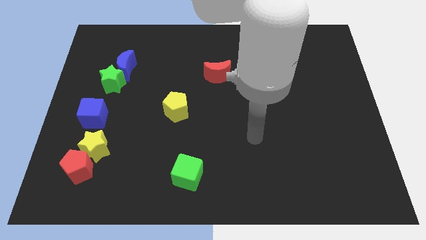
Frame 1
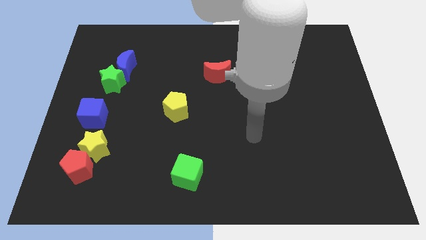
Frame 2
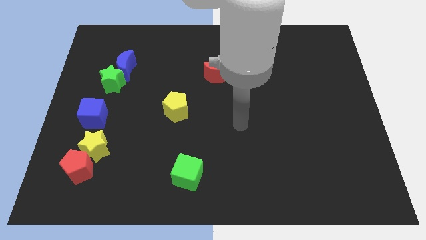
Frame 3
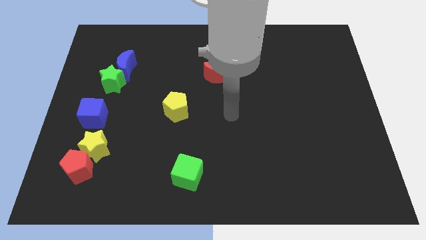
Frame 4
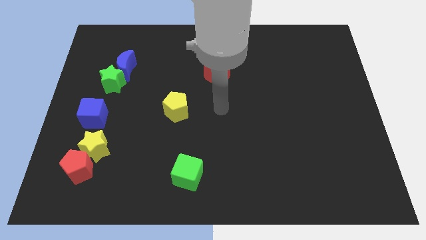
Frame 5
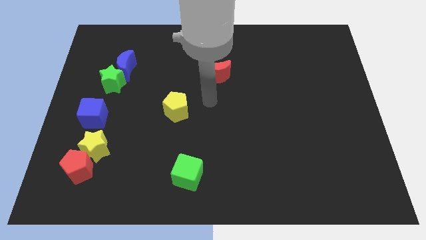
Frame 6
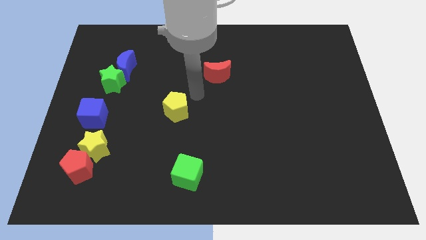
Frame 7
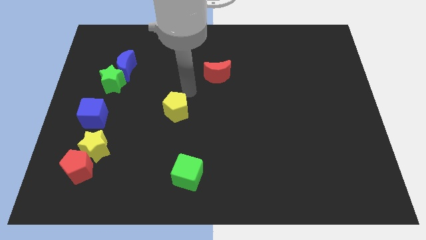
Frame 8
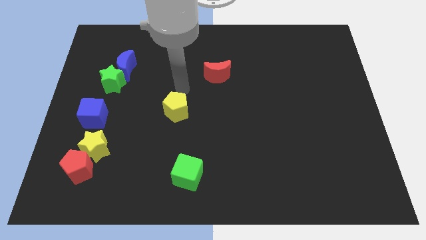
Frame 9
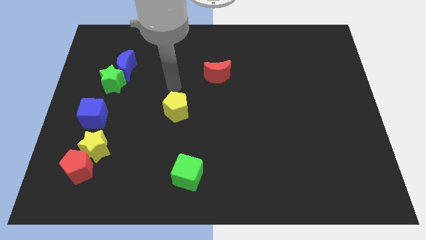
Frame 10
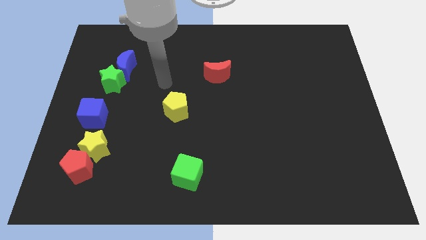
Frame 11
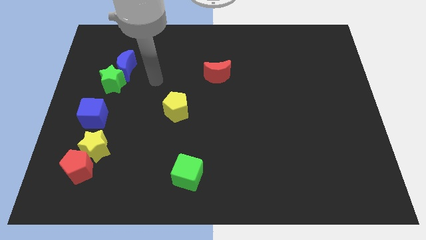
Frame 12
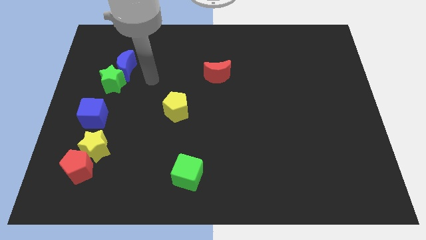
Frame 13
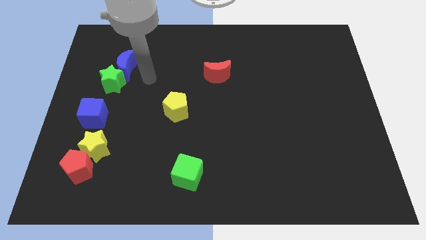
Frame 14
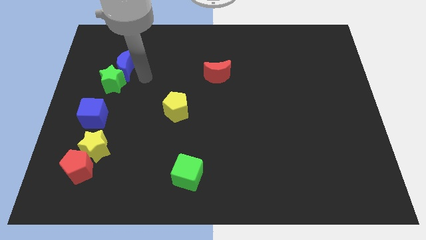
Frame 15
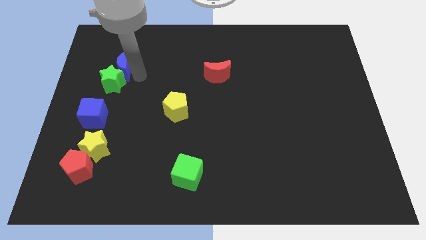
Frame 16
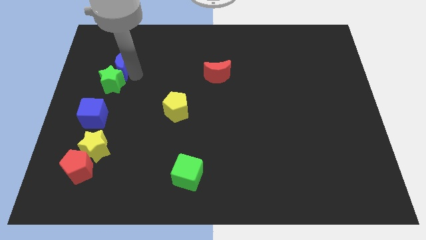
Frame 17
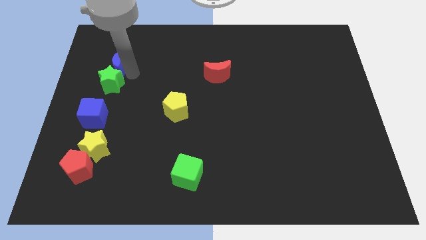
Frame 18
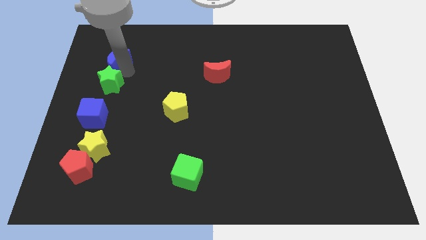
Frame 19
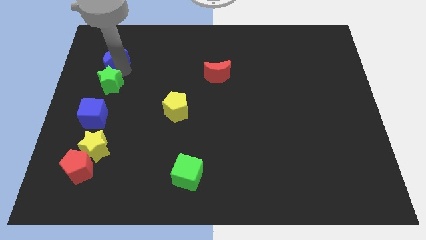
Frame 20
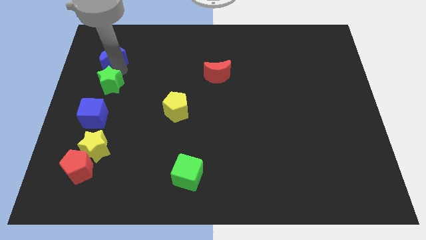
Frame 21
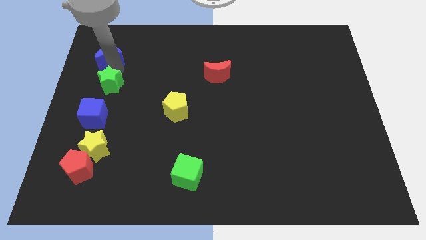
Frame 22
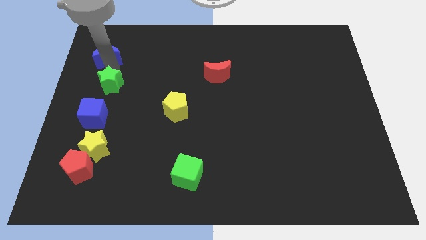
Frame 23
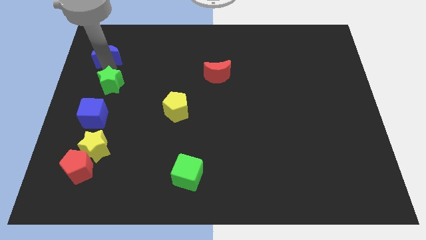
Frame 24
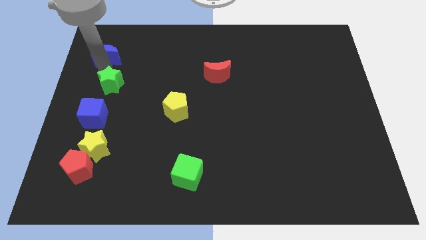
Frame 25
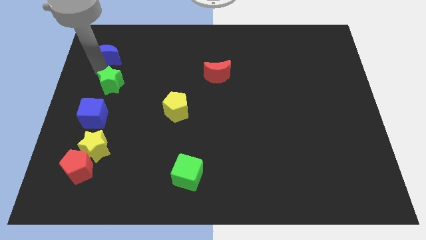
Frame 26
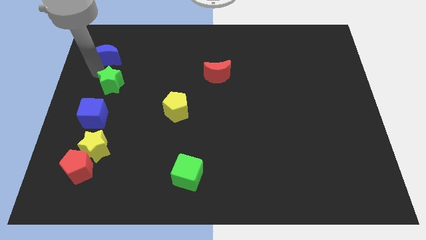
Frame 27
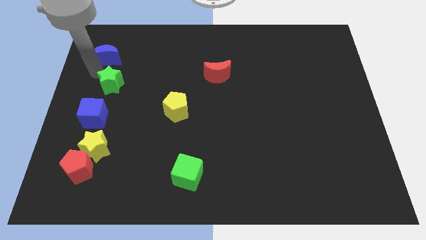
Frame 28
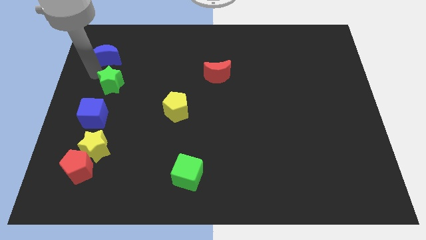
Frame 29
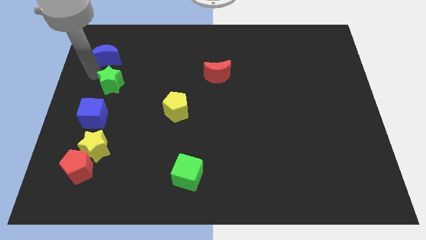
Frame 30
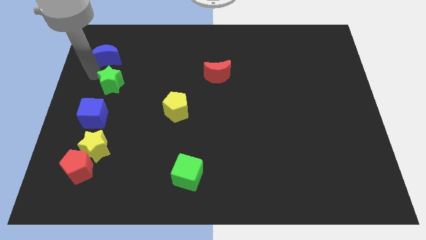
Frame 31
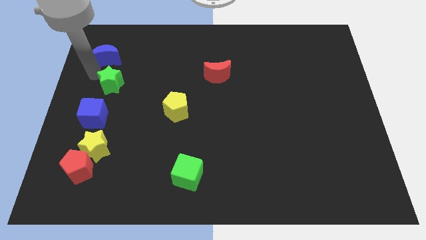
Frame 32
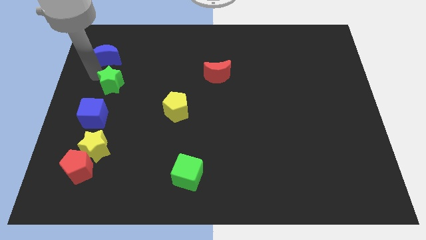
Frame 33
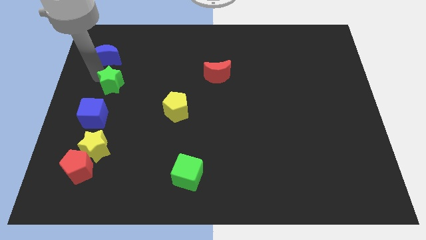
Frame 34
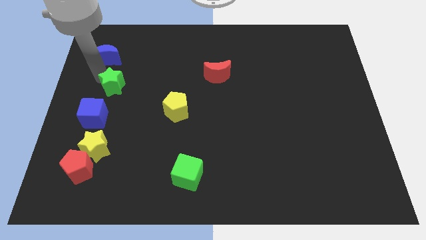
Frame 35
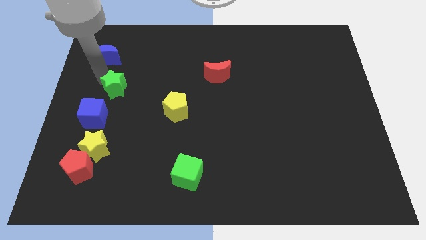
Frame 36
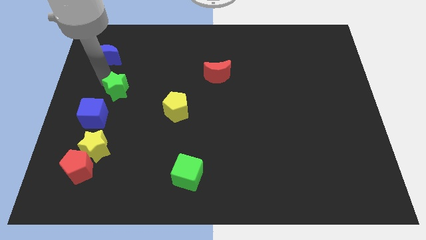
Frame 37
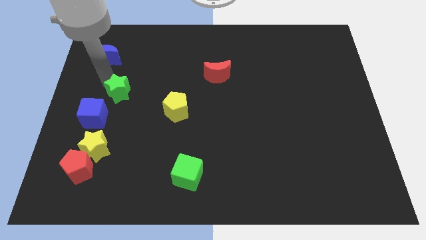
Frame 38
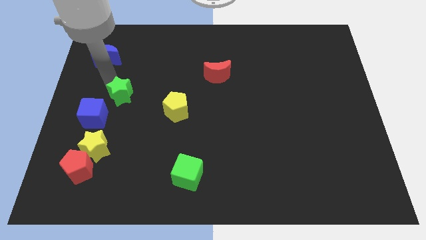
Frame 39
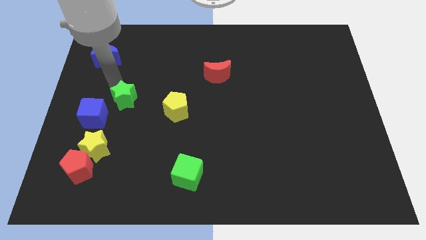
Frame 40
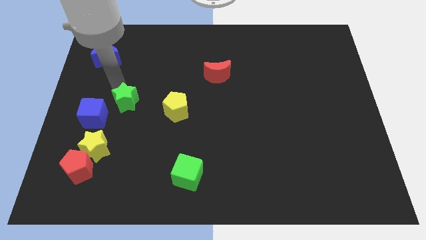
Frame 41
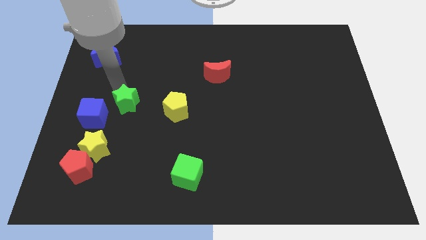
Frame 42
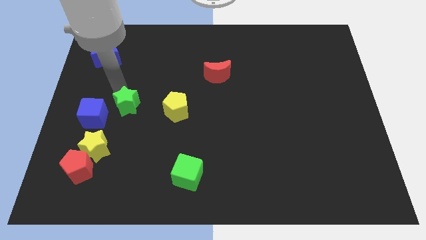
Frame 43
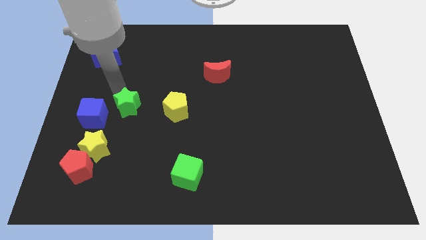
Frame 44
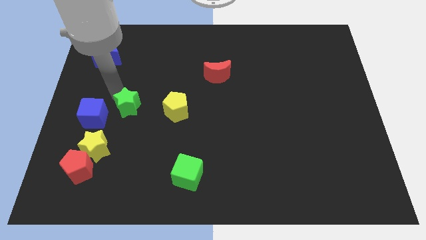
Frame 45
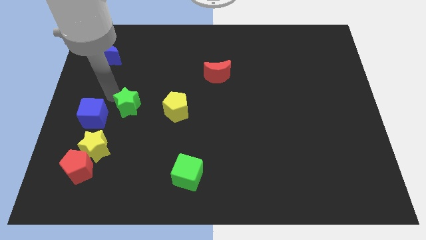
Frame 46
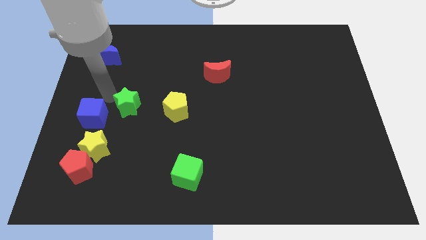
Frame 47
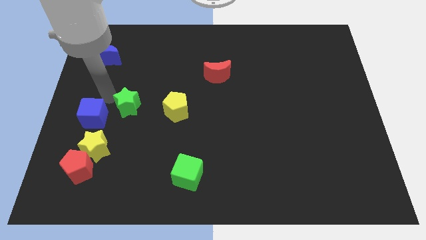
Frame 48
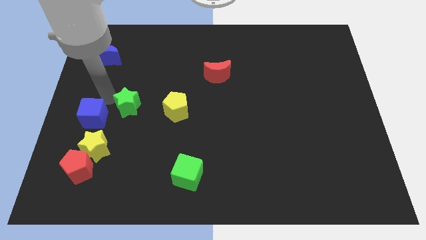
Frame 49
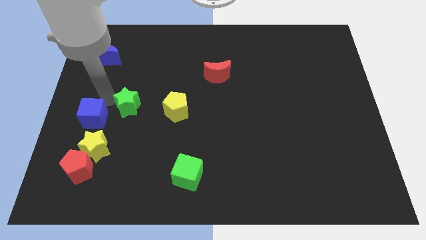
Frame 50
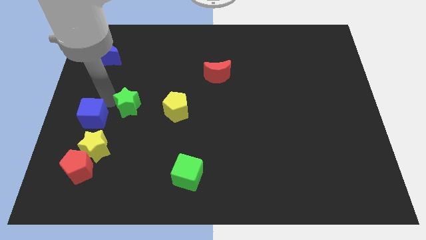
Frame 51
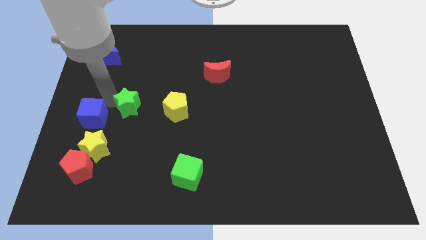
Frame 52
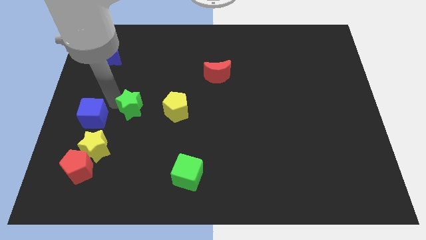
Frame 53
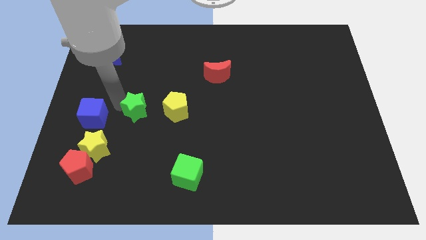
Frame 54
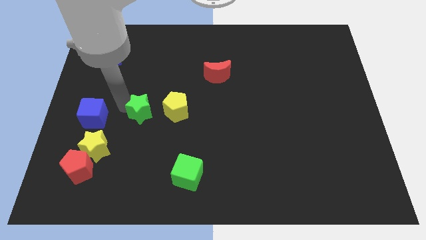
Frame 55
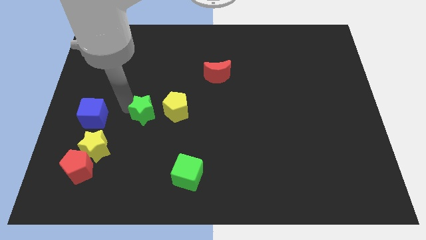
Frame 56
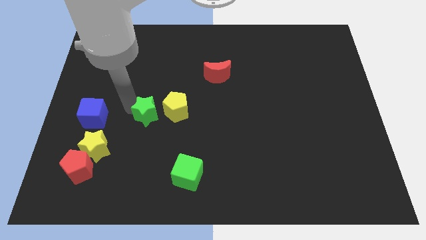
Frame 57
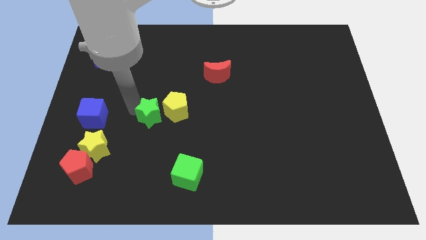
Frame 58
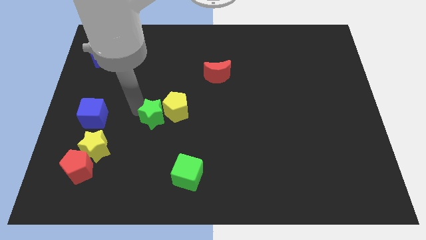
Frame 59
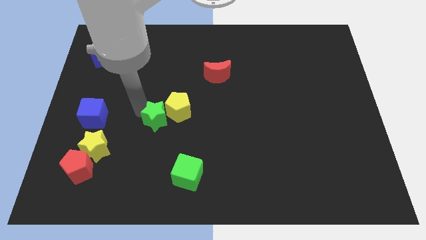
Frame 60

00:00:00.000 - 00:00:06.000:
put the green star to the yellow pentagon

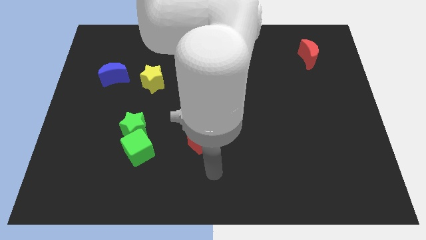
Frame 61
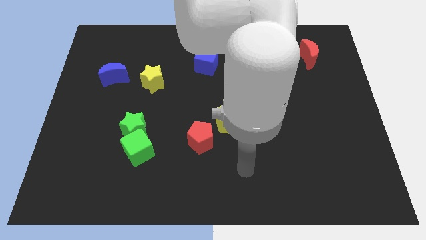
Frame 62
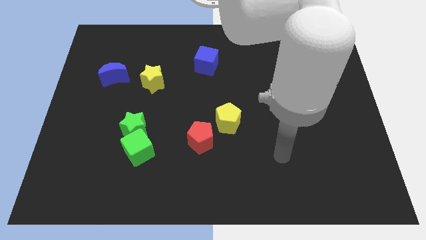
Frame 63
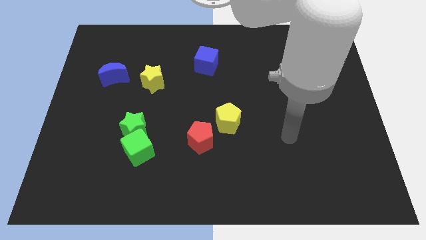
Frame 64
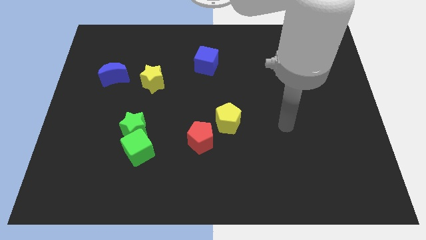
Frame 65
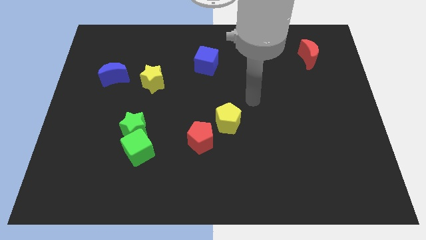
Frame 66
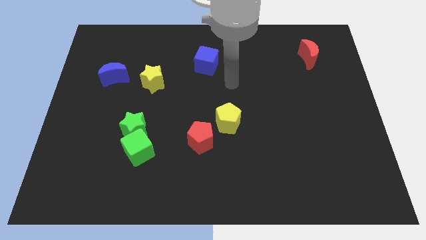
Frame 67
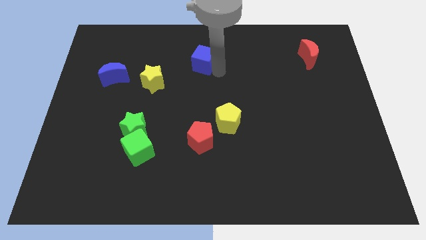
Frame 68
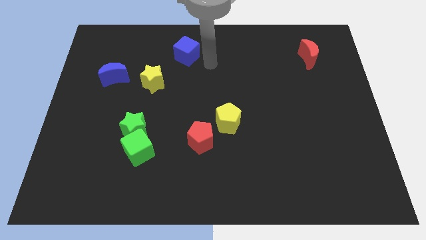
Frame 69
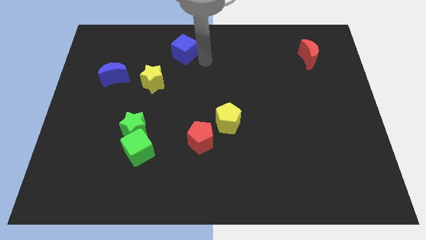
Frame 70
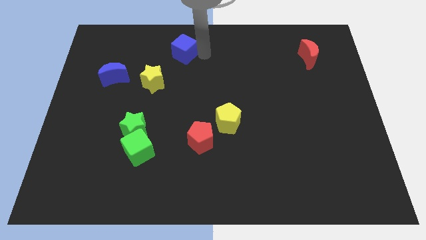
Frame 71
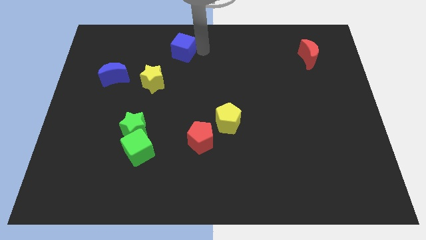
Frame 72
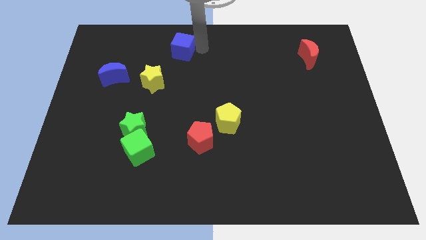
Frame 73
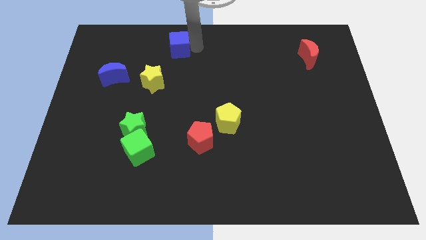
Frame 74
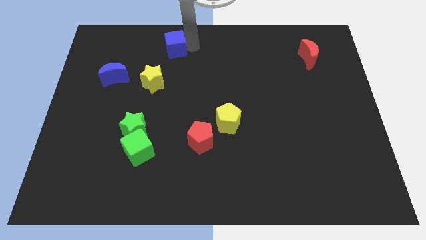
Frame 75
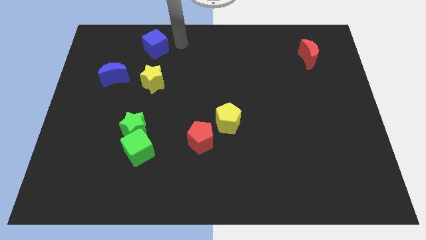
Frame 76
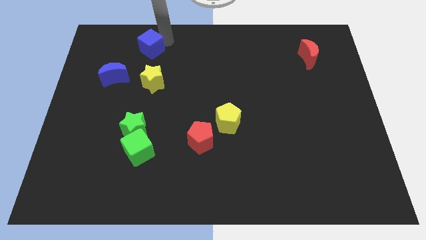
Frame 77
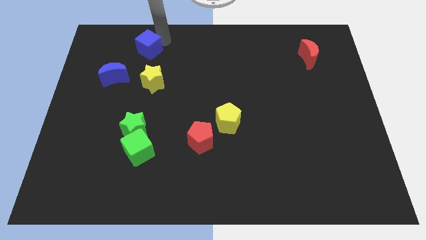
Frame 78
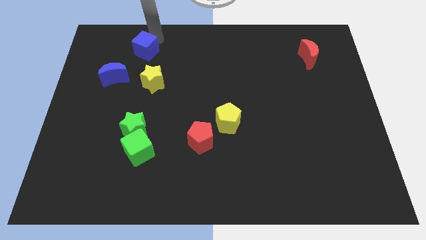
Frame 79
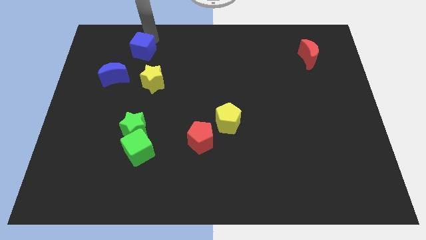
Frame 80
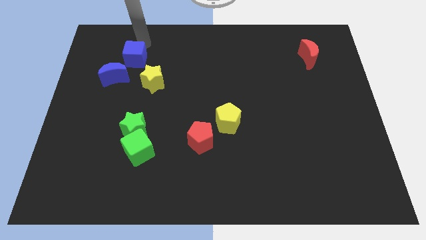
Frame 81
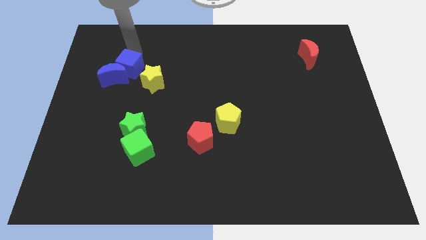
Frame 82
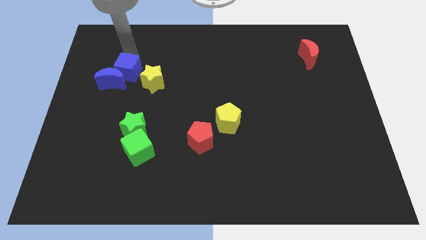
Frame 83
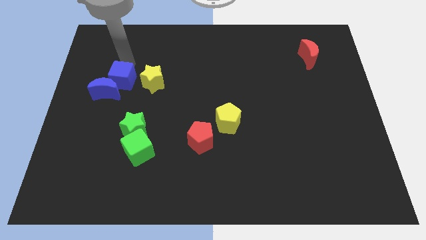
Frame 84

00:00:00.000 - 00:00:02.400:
slide the blue cube next to the blue moon
